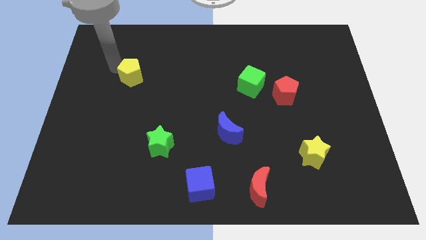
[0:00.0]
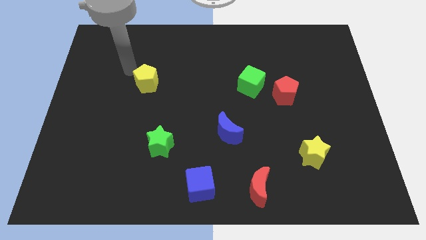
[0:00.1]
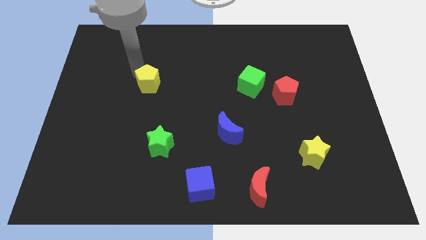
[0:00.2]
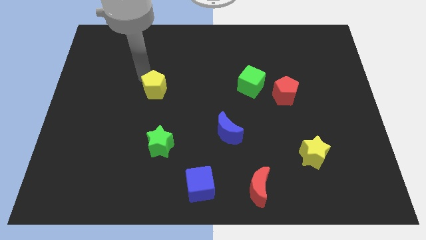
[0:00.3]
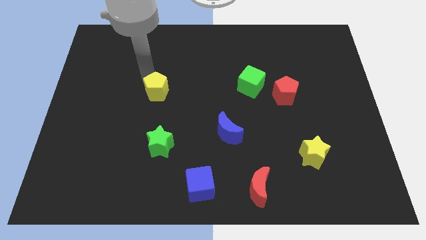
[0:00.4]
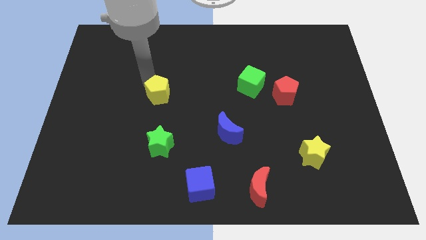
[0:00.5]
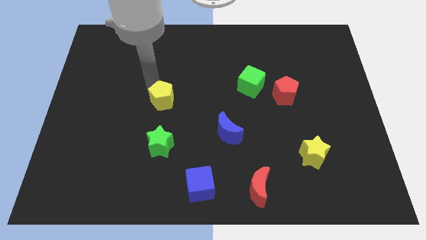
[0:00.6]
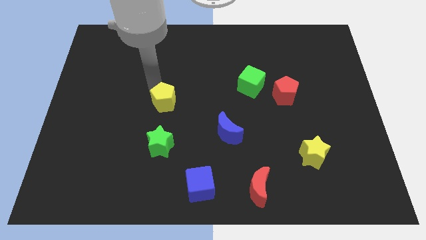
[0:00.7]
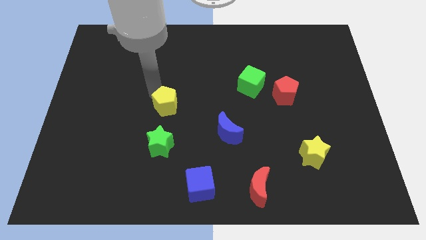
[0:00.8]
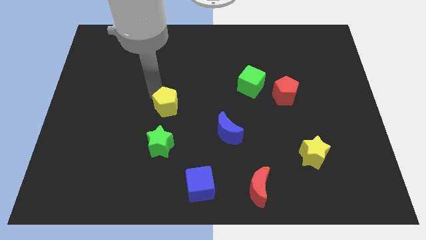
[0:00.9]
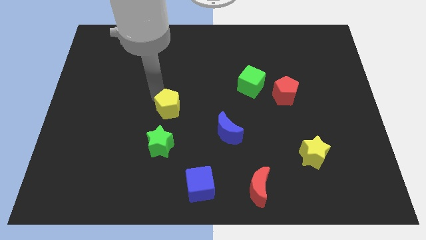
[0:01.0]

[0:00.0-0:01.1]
place the yellow pentagon vertically above the green star

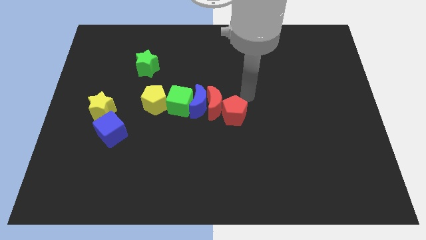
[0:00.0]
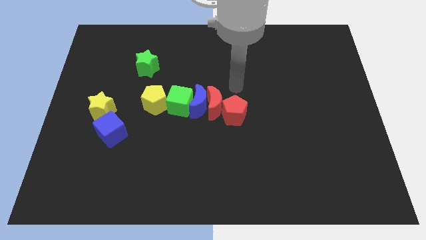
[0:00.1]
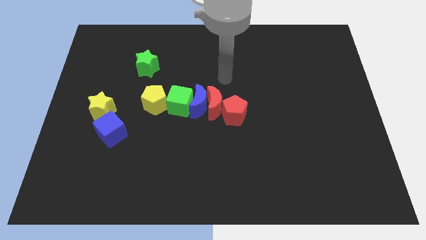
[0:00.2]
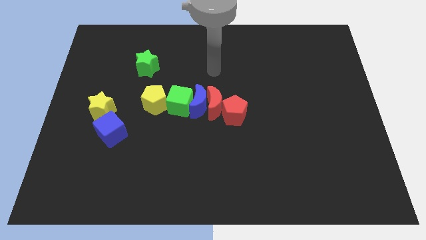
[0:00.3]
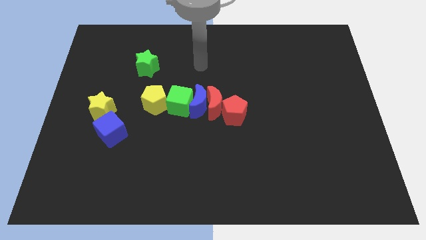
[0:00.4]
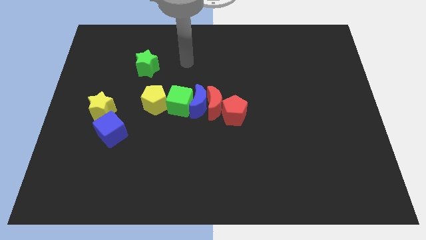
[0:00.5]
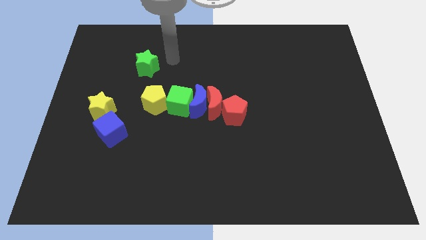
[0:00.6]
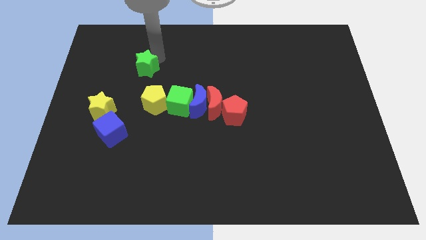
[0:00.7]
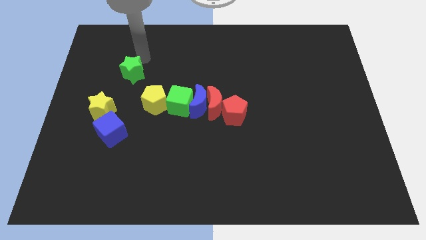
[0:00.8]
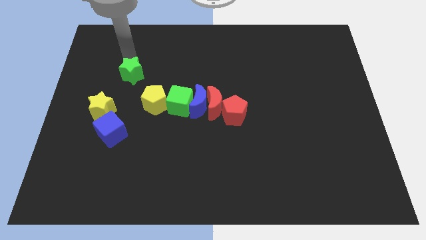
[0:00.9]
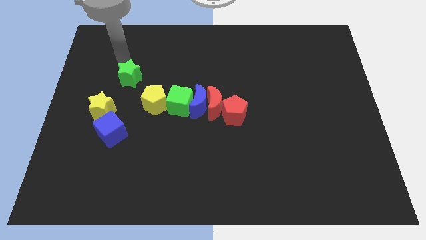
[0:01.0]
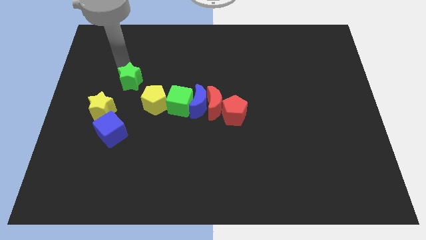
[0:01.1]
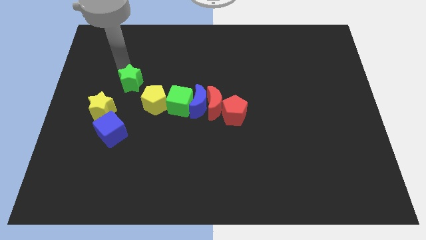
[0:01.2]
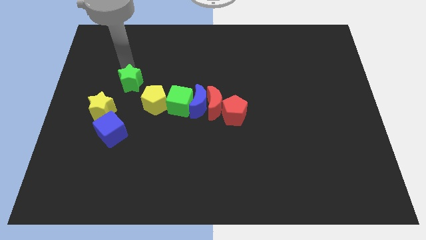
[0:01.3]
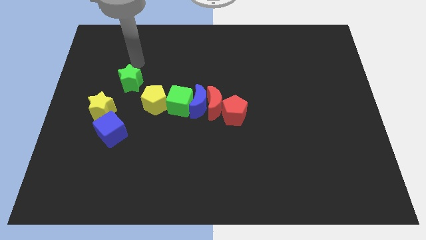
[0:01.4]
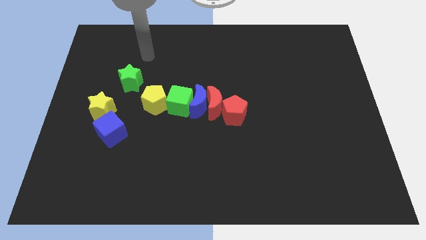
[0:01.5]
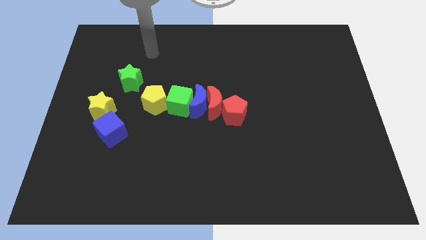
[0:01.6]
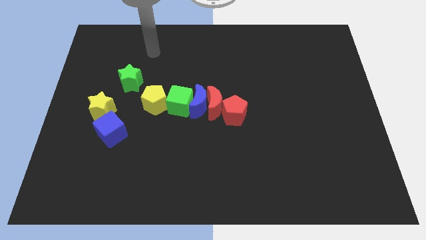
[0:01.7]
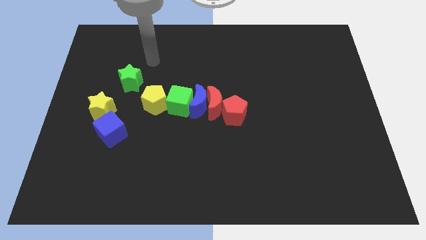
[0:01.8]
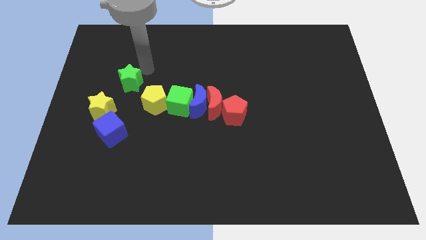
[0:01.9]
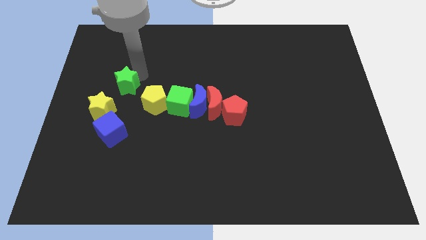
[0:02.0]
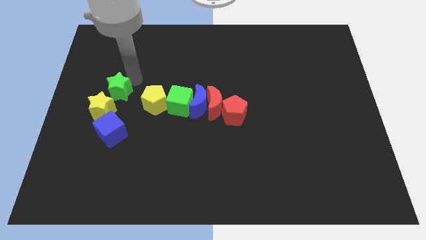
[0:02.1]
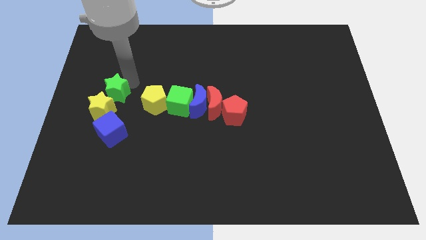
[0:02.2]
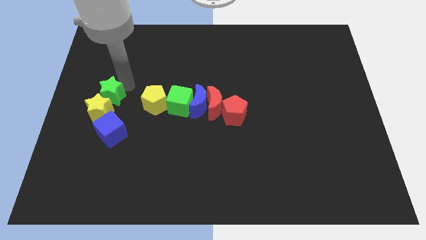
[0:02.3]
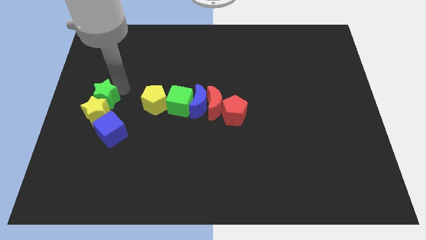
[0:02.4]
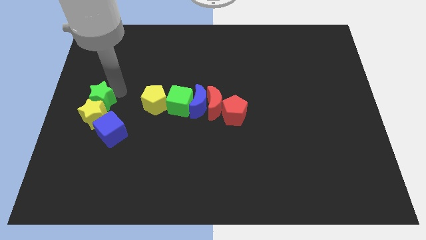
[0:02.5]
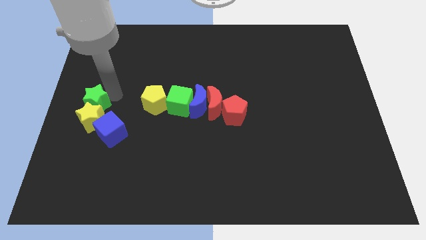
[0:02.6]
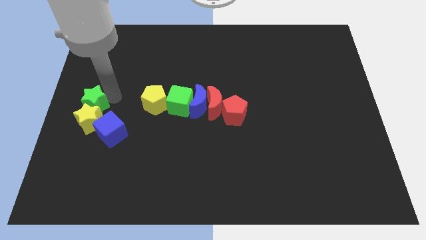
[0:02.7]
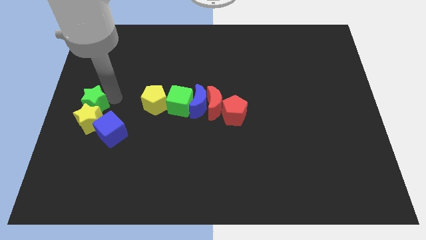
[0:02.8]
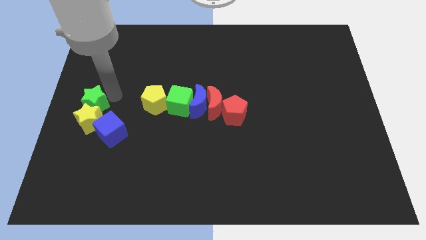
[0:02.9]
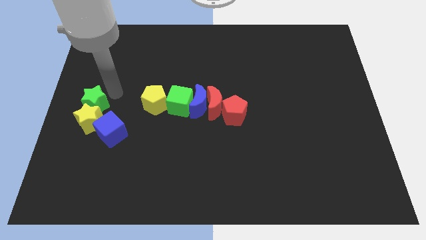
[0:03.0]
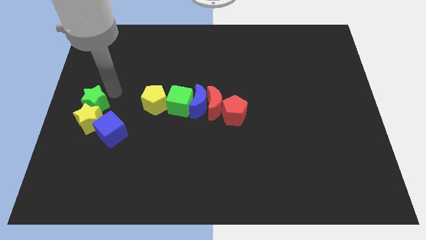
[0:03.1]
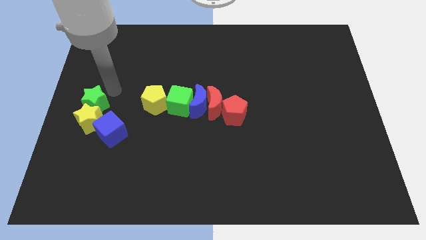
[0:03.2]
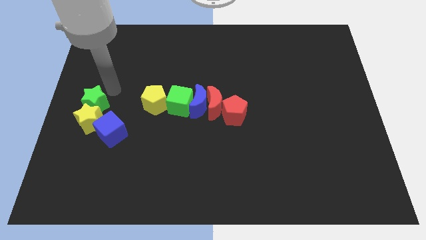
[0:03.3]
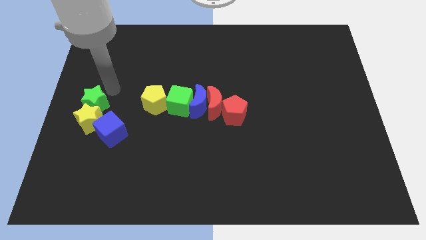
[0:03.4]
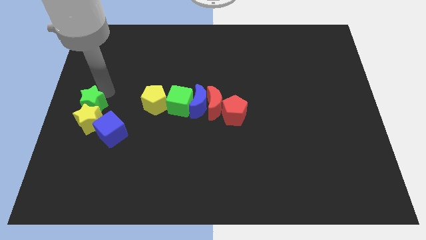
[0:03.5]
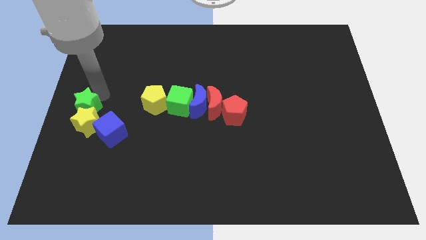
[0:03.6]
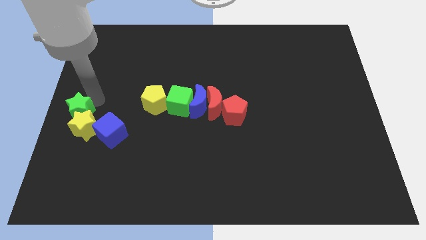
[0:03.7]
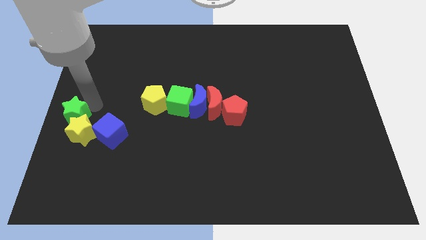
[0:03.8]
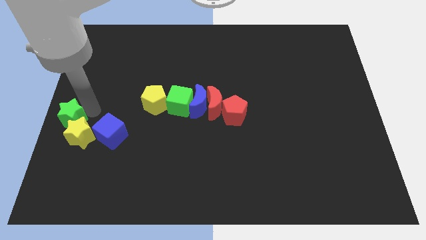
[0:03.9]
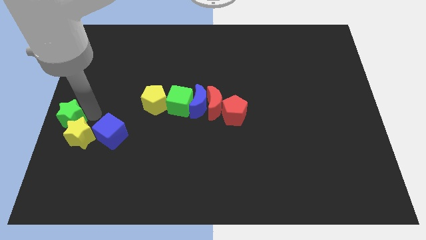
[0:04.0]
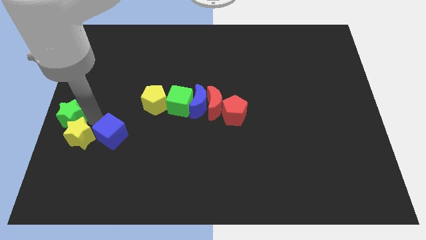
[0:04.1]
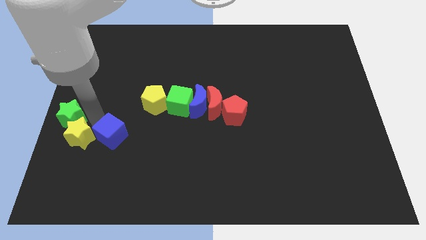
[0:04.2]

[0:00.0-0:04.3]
move green star to the left center of the board

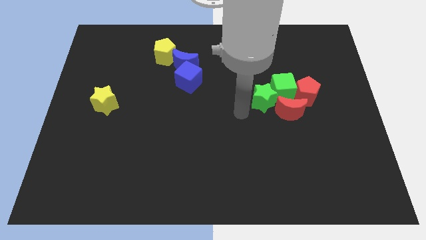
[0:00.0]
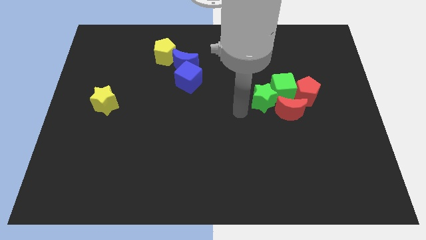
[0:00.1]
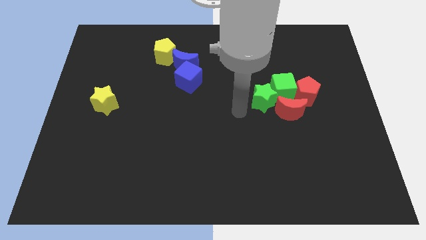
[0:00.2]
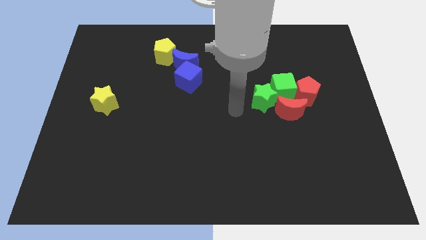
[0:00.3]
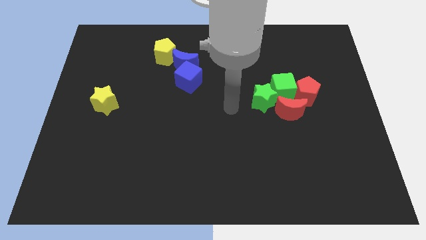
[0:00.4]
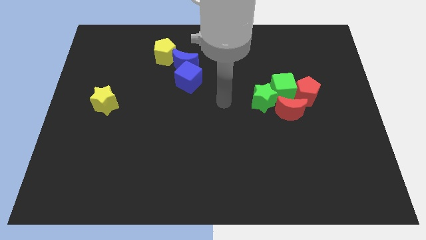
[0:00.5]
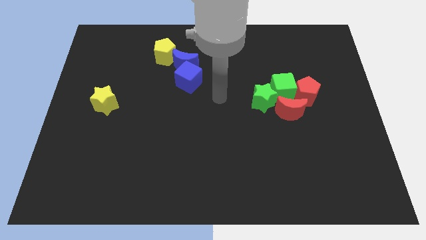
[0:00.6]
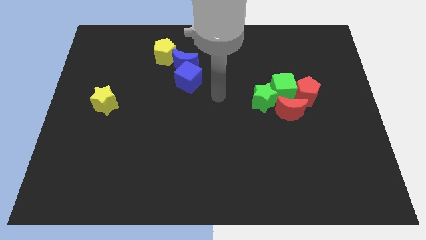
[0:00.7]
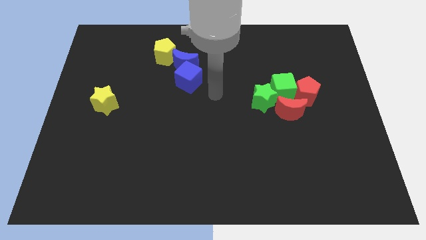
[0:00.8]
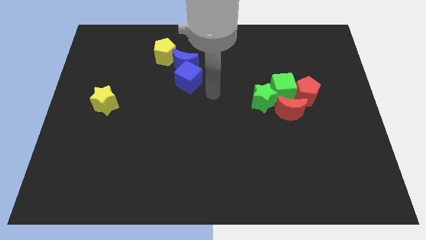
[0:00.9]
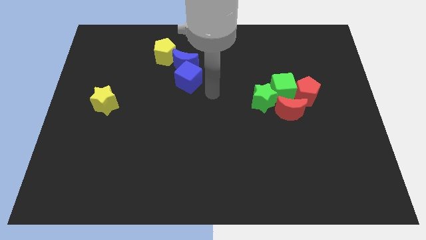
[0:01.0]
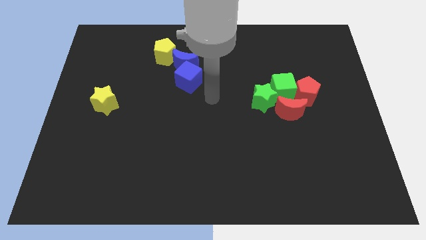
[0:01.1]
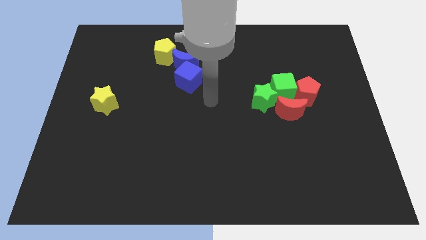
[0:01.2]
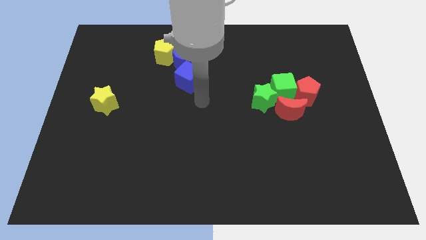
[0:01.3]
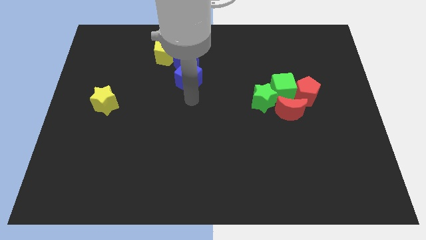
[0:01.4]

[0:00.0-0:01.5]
move your arm at the bottom side of the blue cube

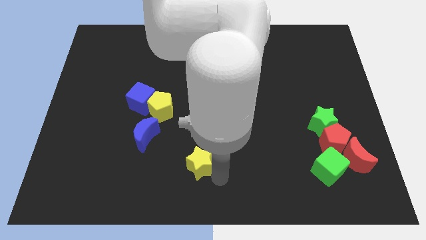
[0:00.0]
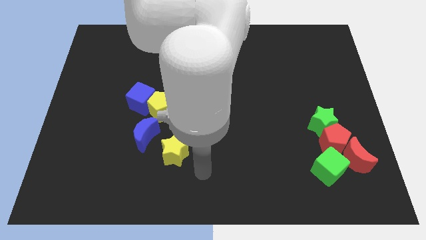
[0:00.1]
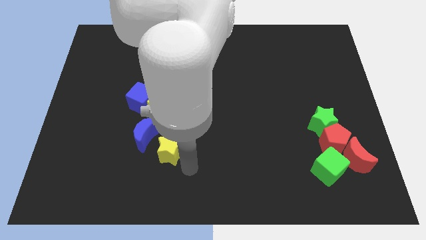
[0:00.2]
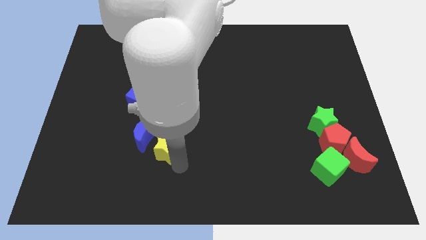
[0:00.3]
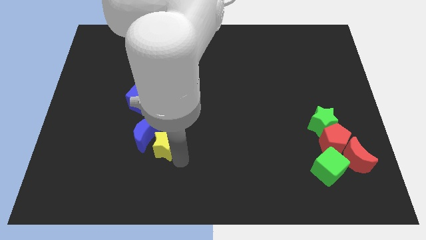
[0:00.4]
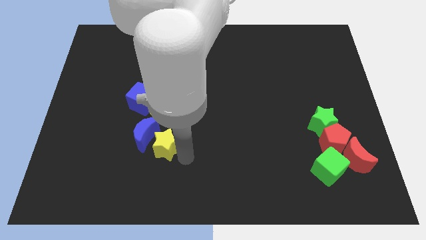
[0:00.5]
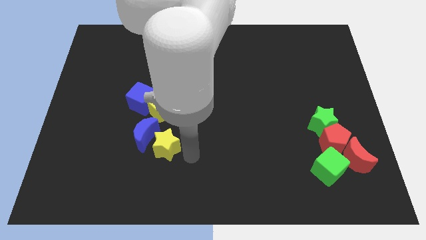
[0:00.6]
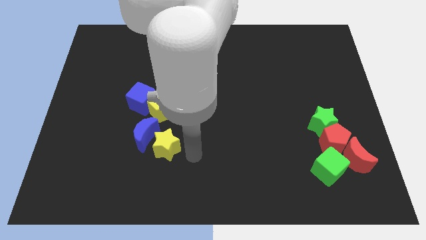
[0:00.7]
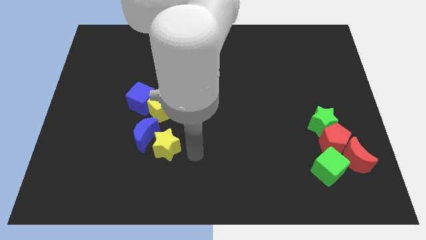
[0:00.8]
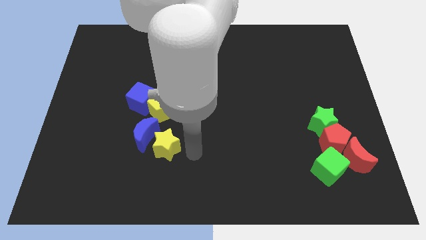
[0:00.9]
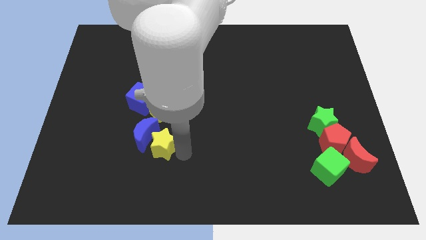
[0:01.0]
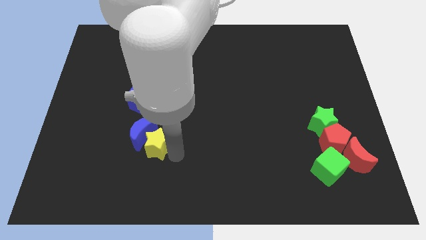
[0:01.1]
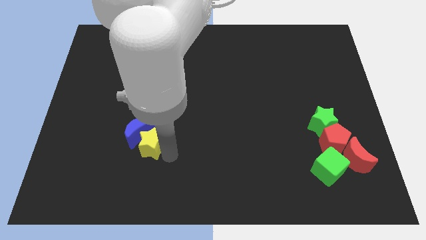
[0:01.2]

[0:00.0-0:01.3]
push yellow star into the blue moon

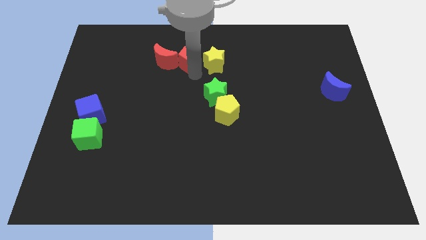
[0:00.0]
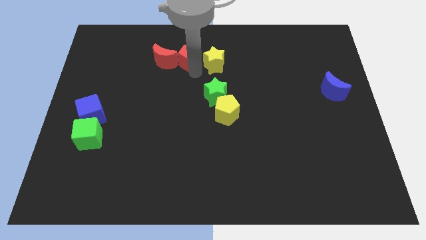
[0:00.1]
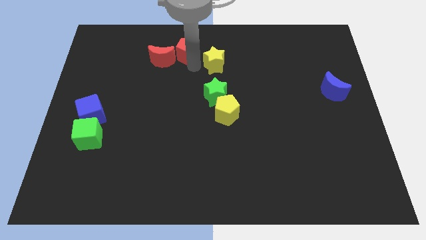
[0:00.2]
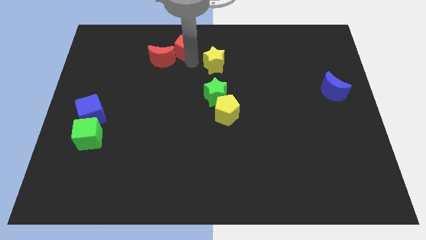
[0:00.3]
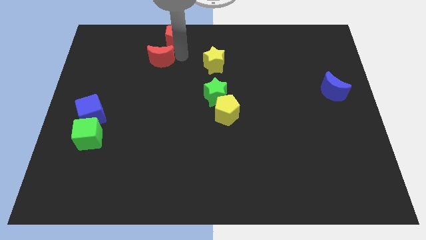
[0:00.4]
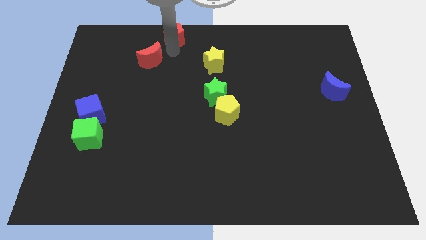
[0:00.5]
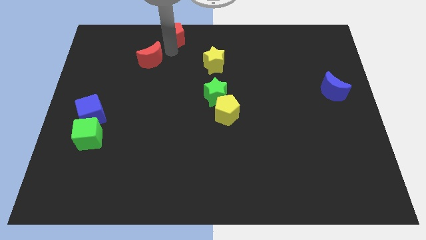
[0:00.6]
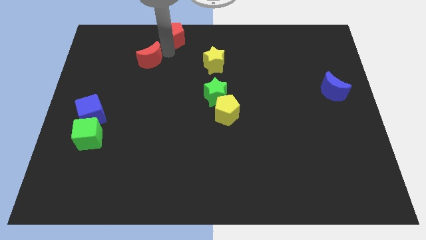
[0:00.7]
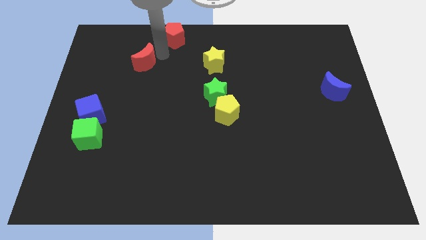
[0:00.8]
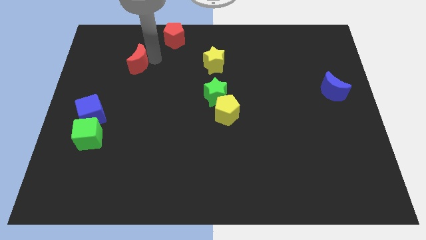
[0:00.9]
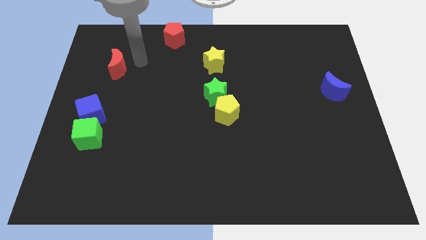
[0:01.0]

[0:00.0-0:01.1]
separate red blocks from each other
